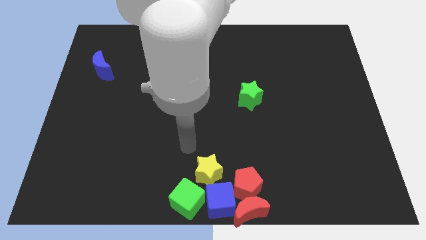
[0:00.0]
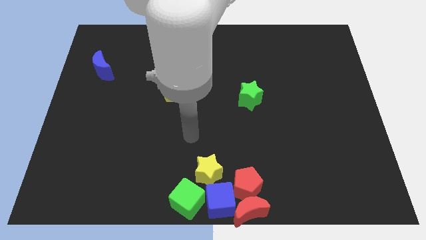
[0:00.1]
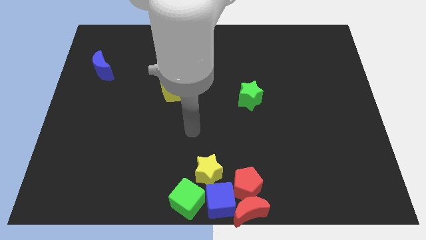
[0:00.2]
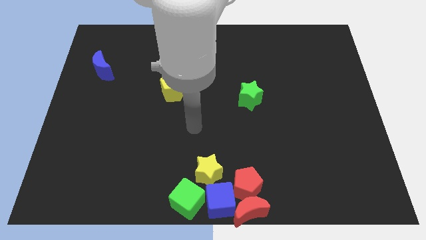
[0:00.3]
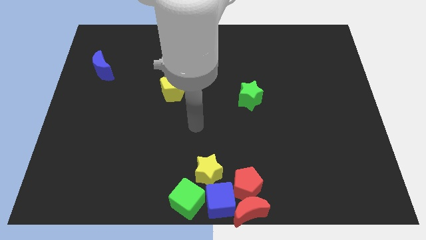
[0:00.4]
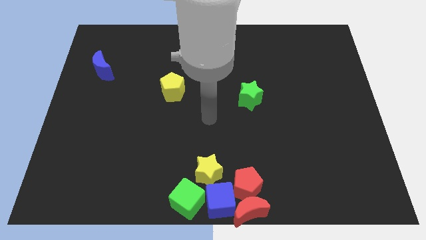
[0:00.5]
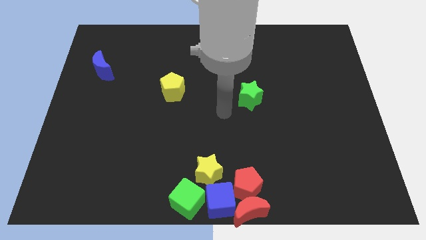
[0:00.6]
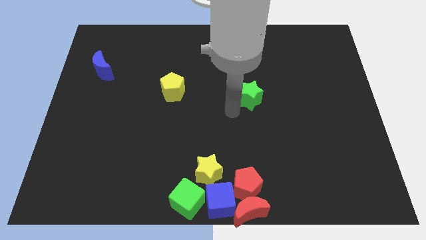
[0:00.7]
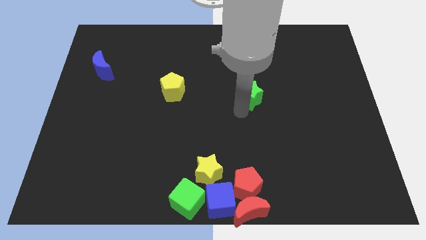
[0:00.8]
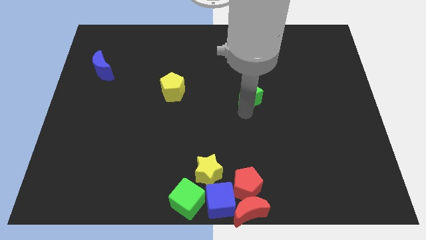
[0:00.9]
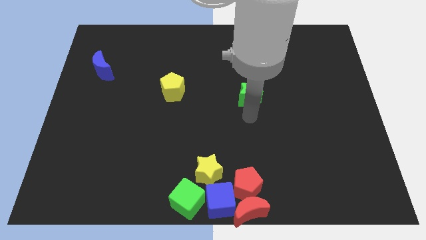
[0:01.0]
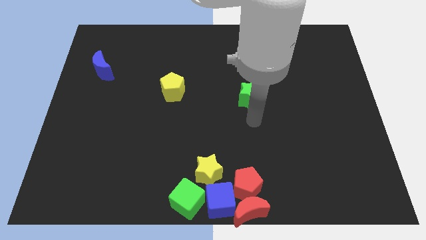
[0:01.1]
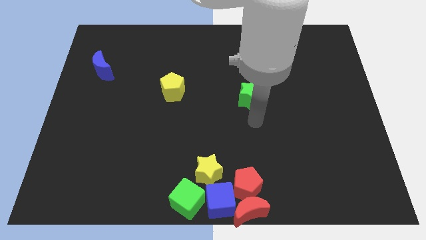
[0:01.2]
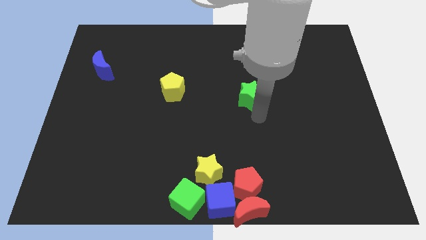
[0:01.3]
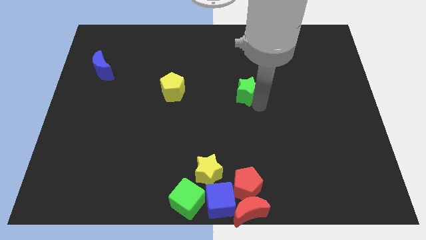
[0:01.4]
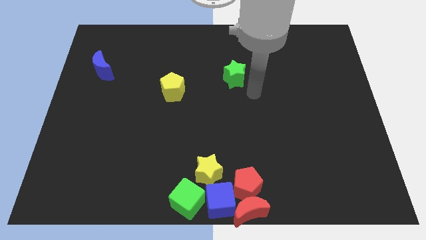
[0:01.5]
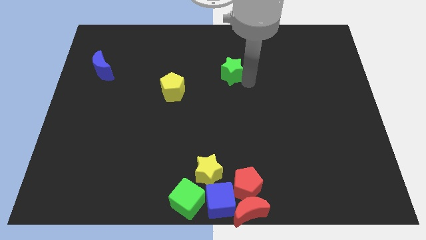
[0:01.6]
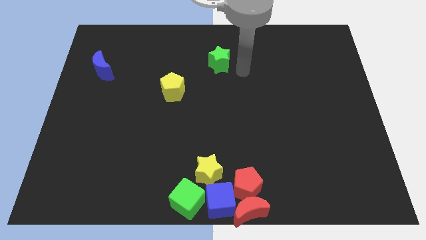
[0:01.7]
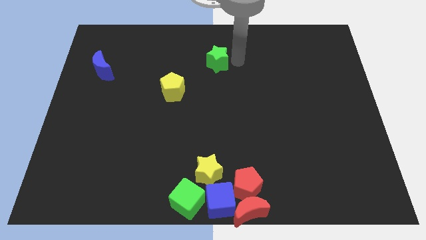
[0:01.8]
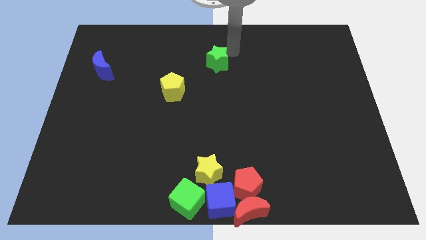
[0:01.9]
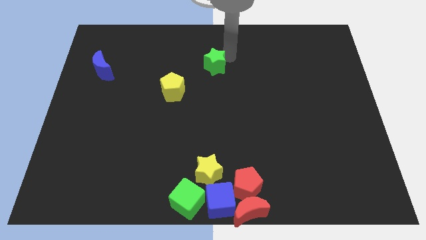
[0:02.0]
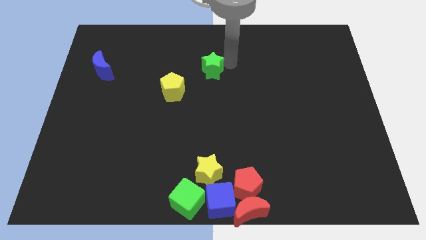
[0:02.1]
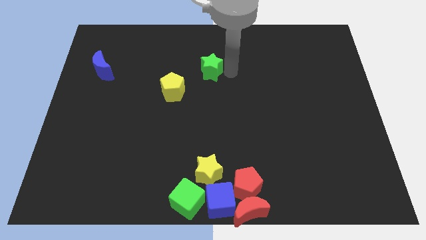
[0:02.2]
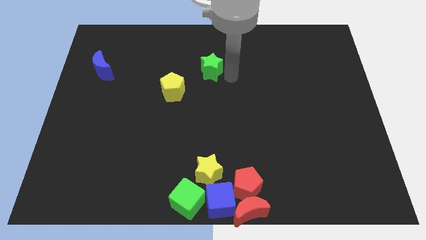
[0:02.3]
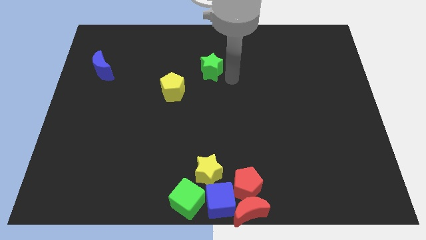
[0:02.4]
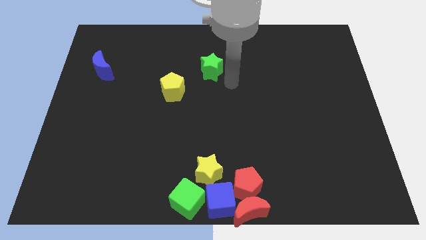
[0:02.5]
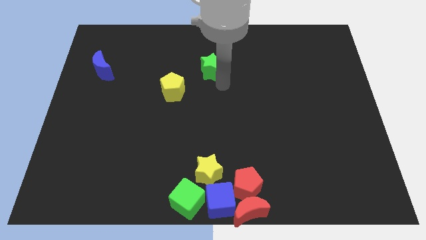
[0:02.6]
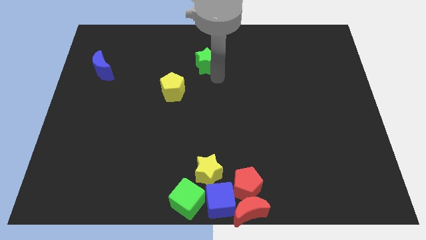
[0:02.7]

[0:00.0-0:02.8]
push the green star to the top right of the yellow pentagon

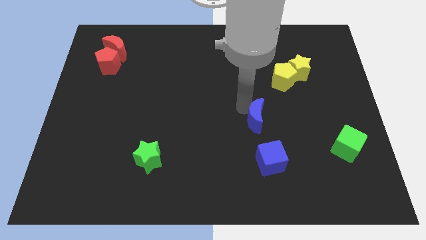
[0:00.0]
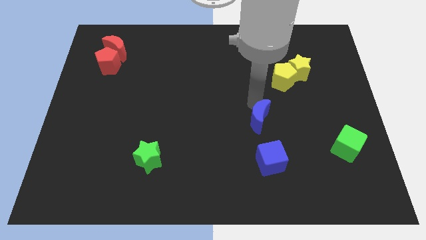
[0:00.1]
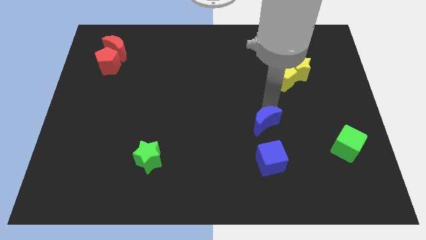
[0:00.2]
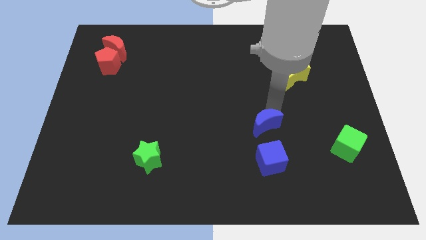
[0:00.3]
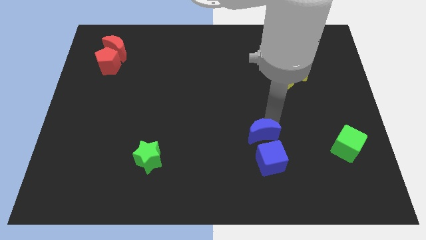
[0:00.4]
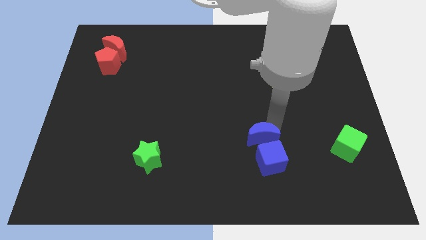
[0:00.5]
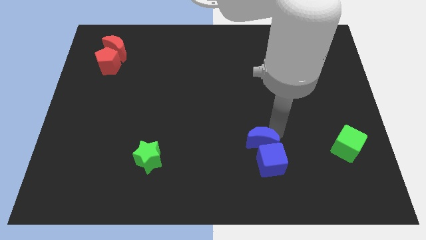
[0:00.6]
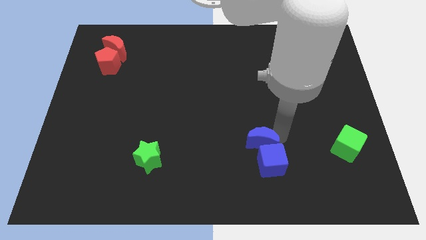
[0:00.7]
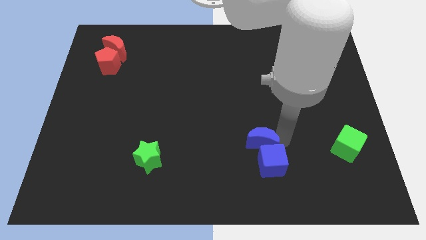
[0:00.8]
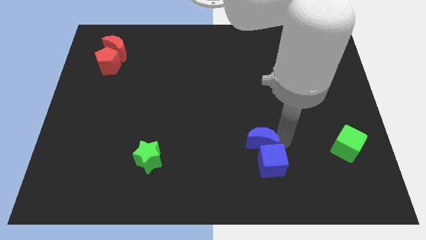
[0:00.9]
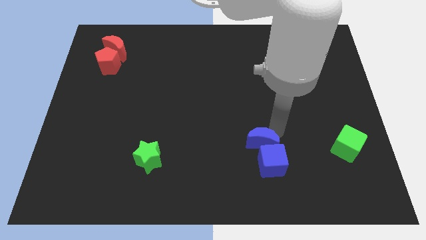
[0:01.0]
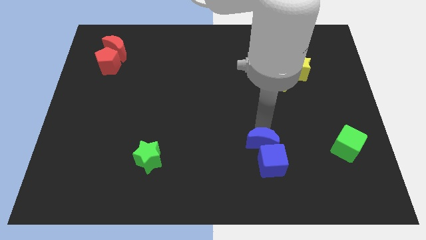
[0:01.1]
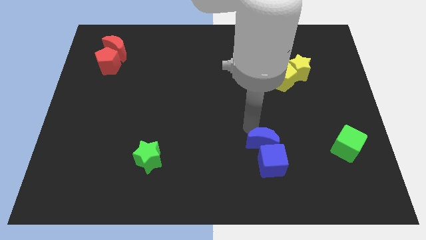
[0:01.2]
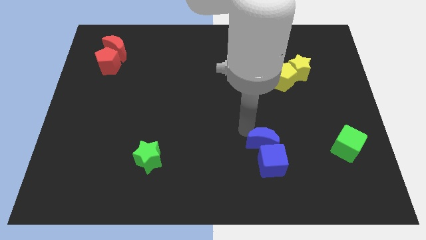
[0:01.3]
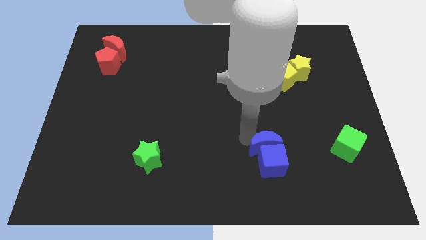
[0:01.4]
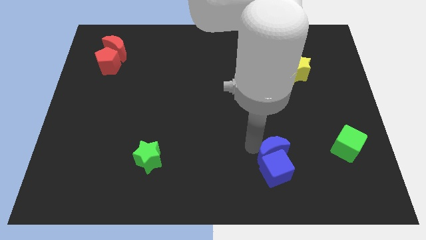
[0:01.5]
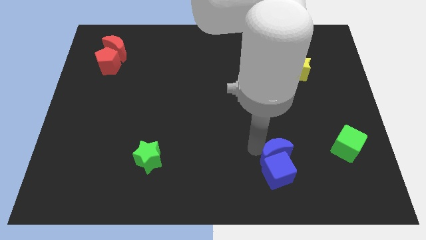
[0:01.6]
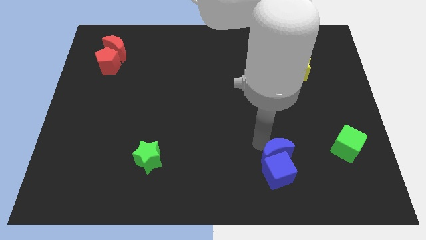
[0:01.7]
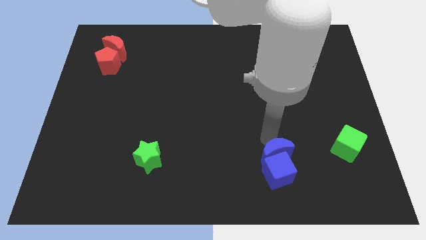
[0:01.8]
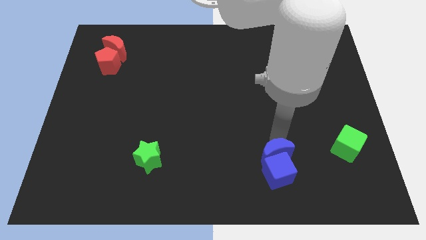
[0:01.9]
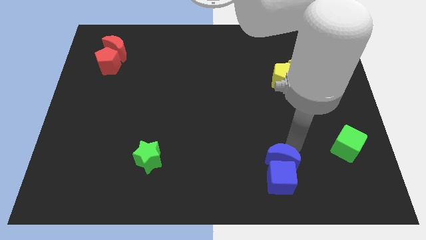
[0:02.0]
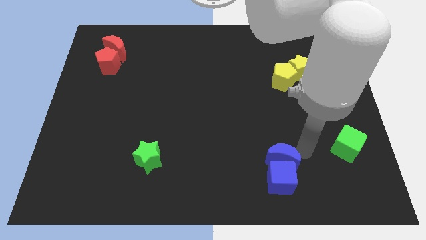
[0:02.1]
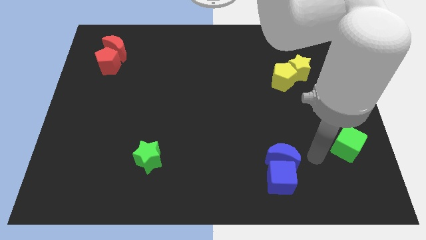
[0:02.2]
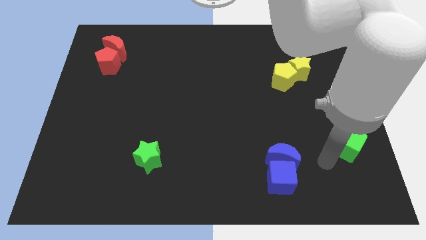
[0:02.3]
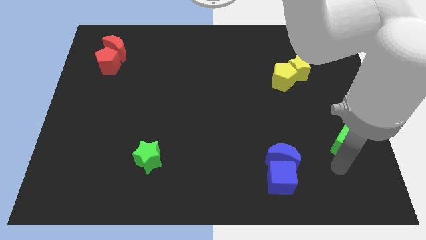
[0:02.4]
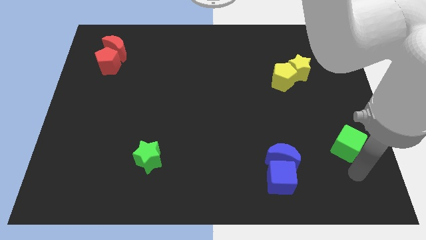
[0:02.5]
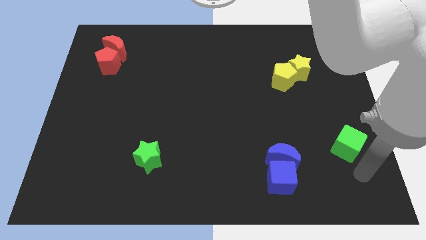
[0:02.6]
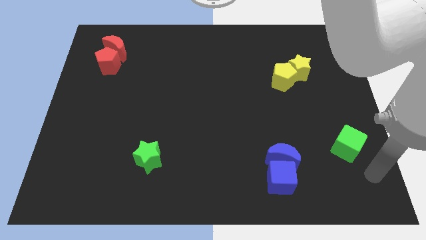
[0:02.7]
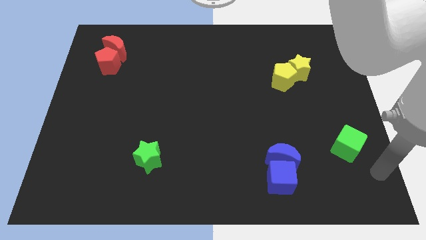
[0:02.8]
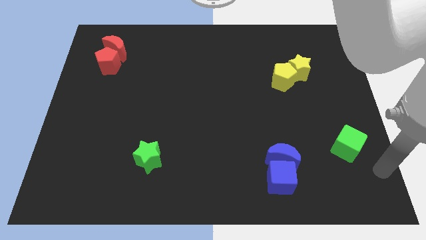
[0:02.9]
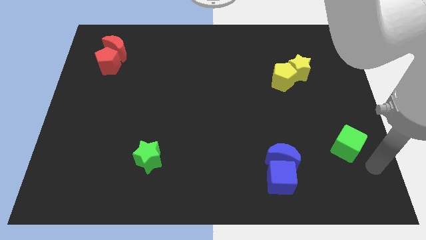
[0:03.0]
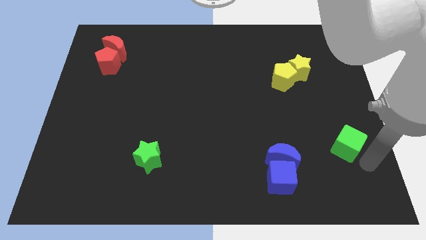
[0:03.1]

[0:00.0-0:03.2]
move blue blocks downwards

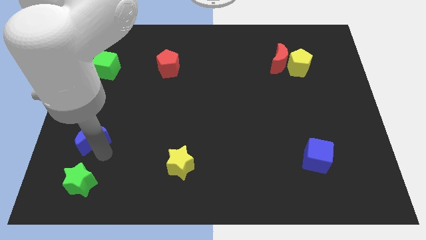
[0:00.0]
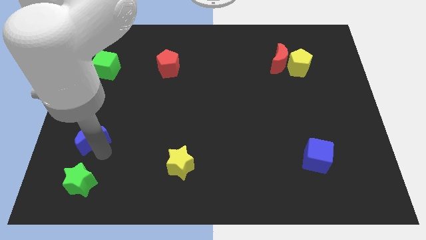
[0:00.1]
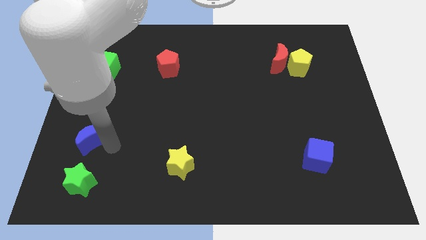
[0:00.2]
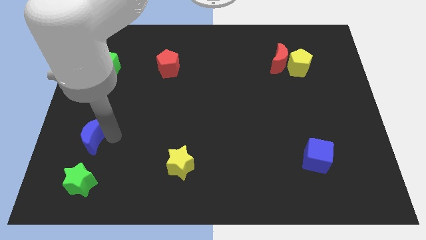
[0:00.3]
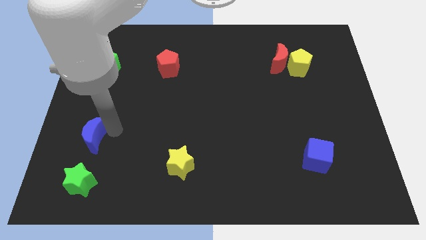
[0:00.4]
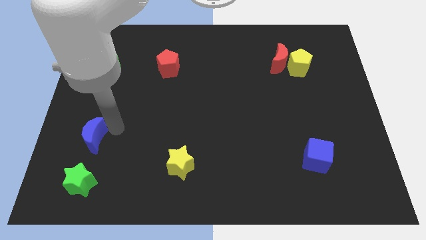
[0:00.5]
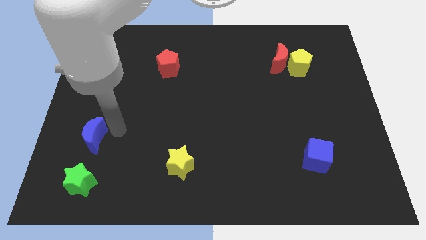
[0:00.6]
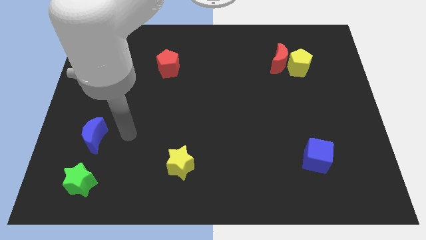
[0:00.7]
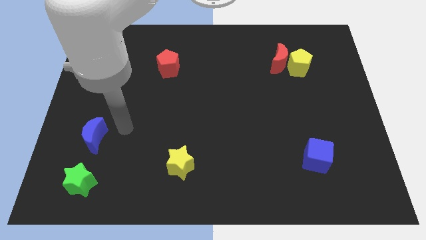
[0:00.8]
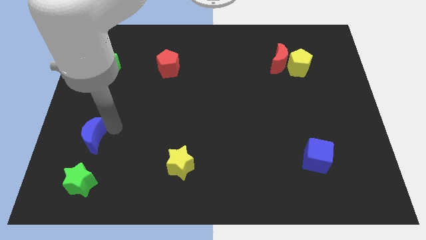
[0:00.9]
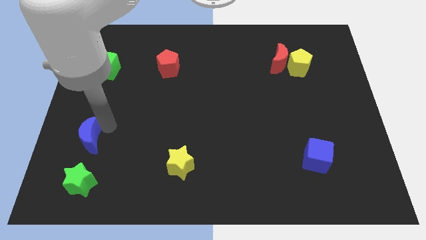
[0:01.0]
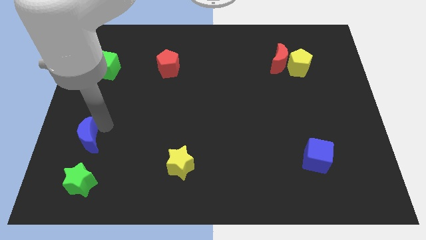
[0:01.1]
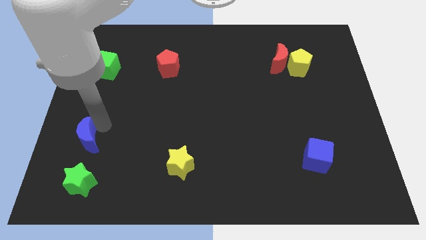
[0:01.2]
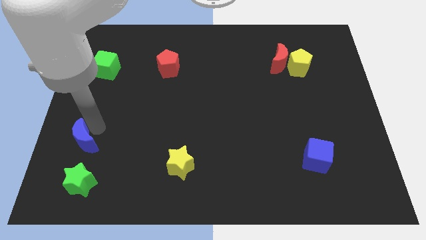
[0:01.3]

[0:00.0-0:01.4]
put the blue moon above the green star

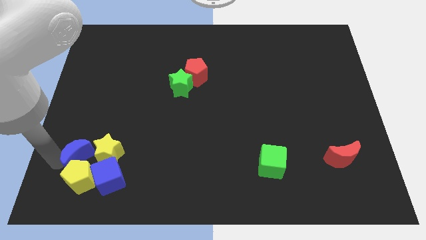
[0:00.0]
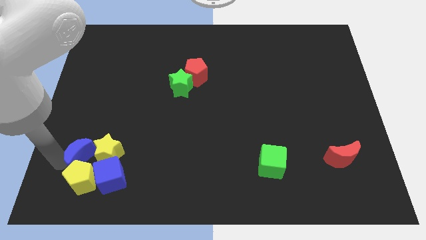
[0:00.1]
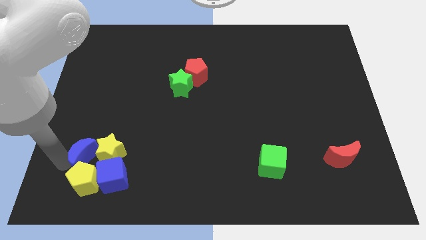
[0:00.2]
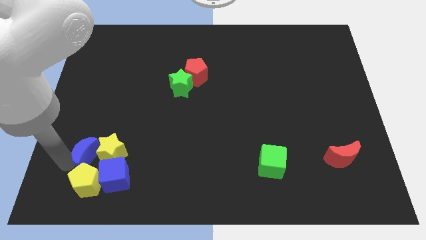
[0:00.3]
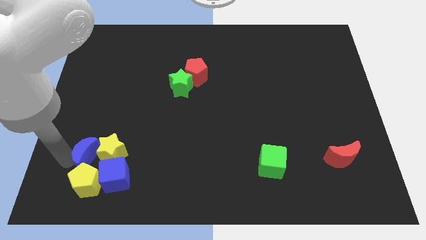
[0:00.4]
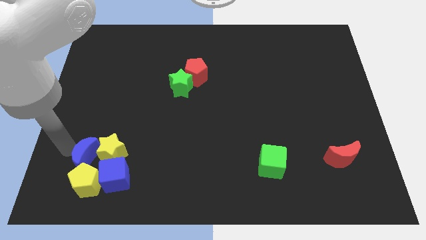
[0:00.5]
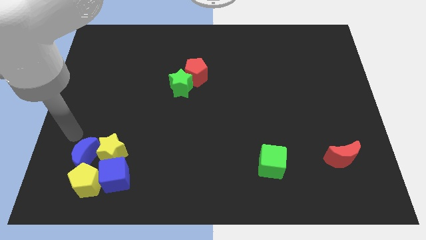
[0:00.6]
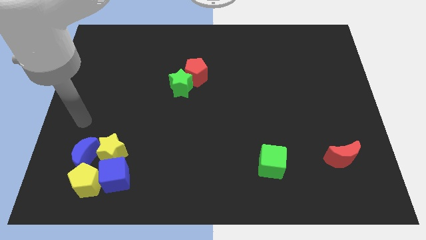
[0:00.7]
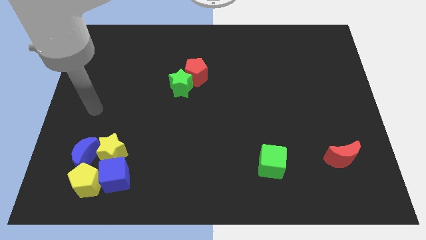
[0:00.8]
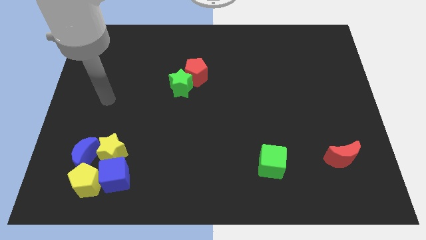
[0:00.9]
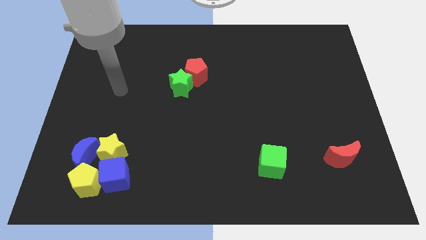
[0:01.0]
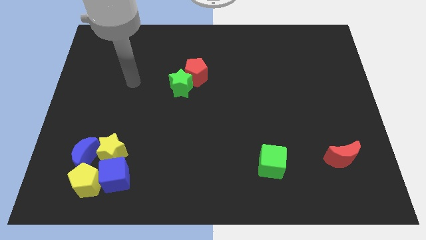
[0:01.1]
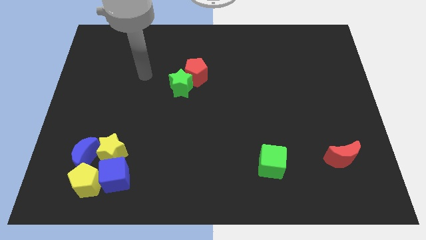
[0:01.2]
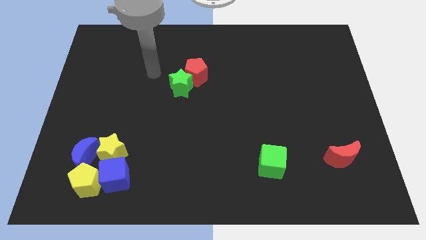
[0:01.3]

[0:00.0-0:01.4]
move your arm away

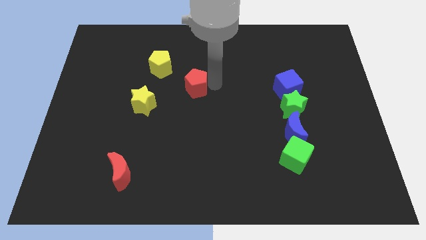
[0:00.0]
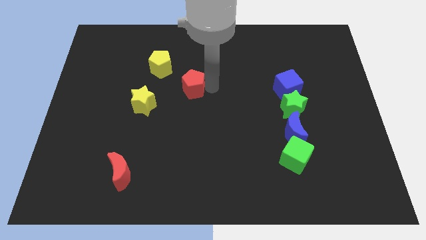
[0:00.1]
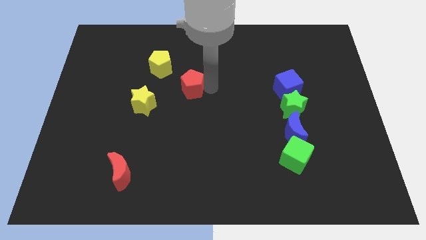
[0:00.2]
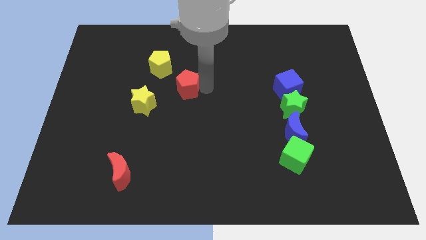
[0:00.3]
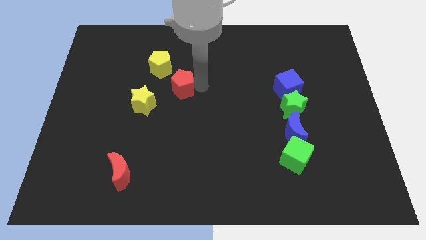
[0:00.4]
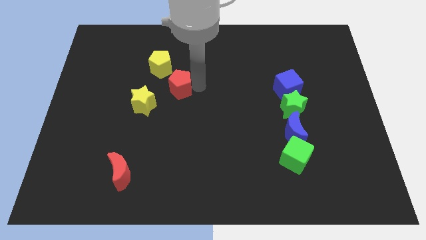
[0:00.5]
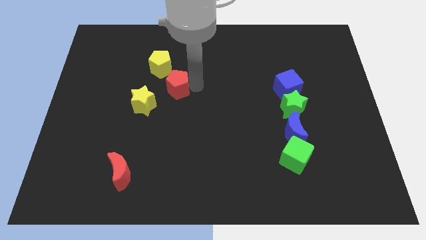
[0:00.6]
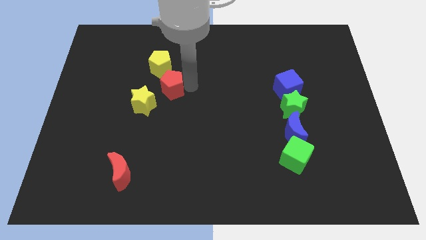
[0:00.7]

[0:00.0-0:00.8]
move red pentagon slightly left
